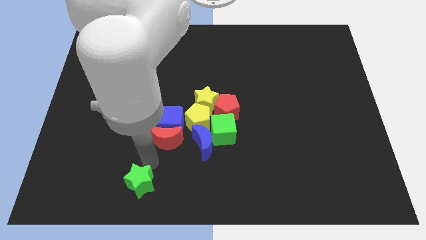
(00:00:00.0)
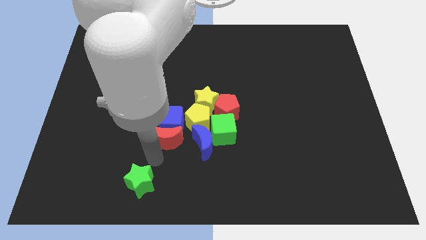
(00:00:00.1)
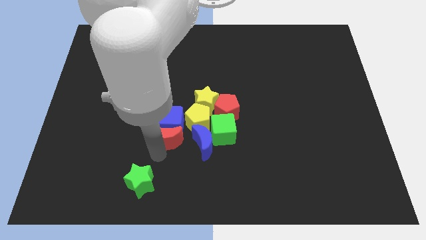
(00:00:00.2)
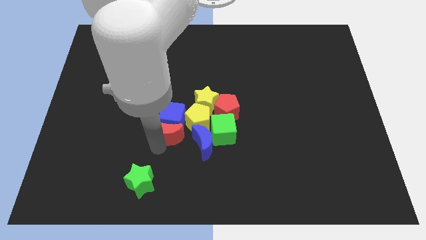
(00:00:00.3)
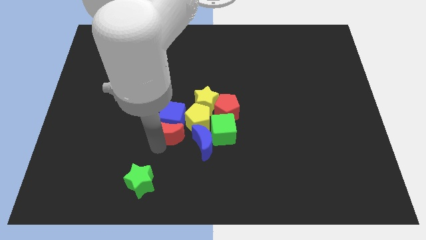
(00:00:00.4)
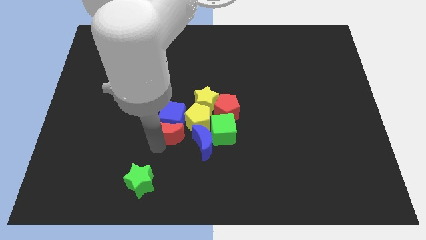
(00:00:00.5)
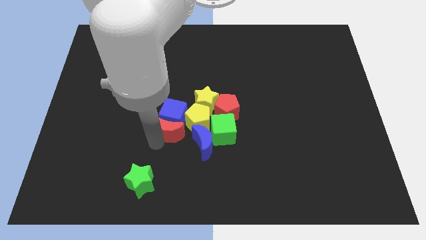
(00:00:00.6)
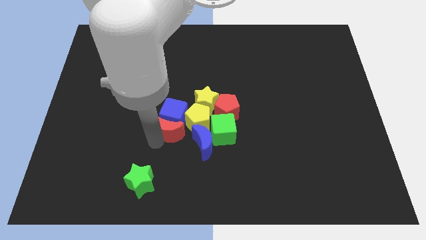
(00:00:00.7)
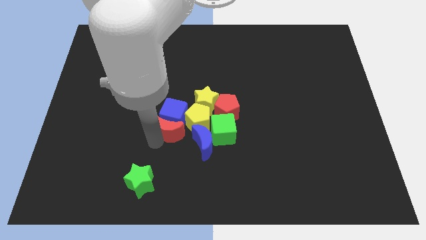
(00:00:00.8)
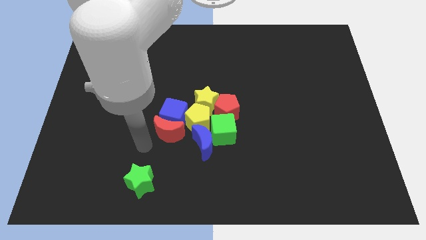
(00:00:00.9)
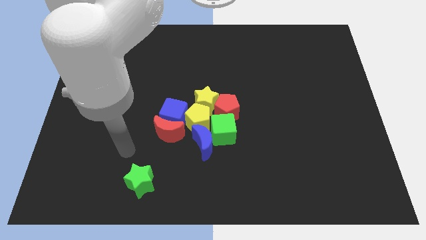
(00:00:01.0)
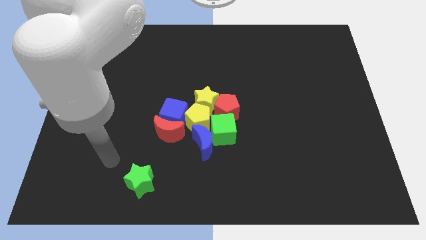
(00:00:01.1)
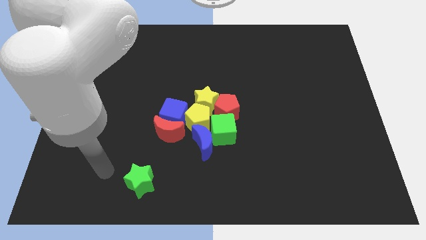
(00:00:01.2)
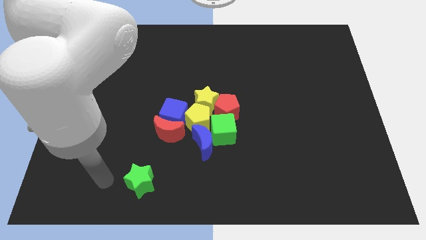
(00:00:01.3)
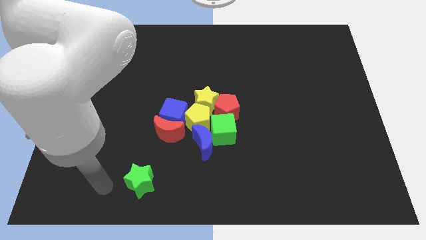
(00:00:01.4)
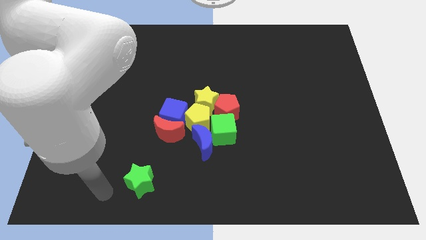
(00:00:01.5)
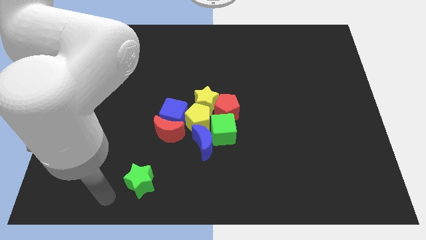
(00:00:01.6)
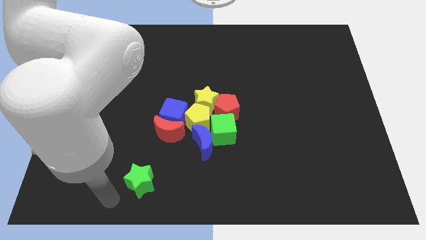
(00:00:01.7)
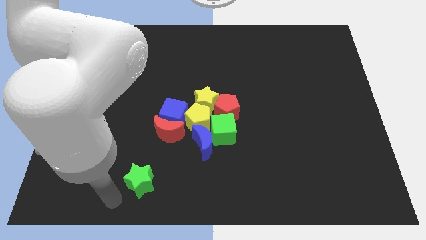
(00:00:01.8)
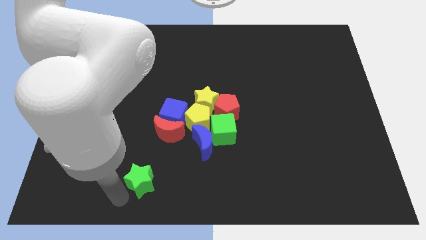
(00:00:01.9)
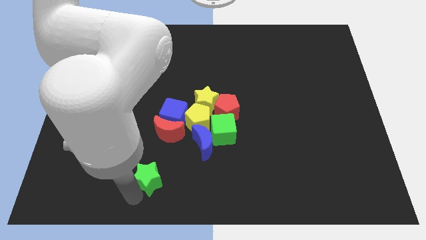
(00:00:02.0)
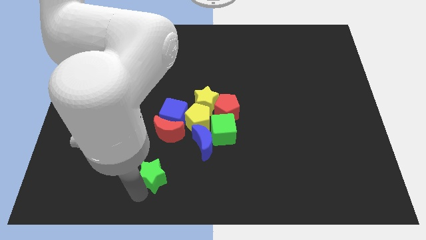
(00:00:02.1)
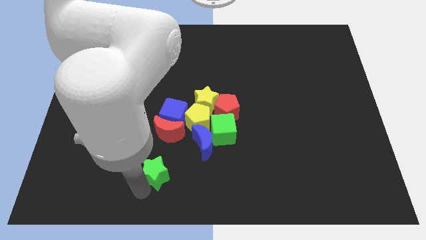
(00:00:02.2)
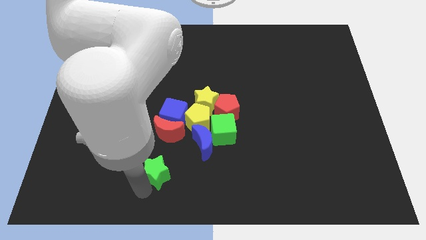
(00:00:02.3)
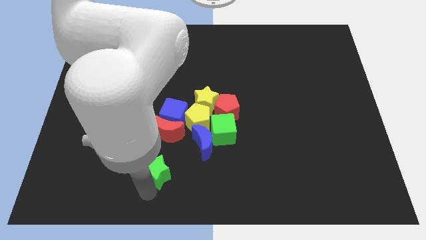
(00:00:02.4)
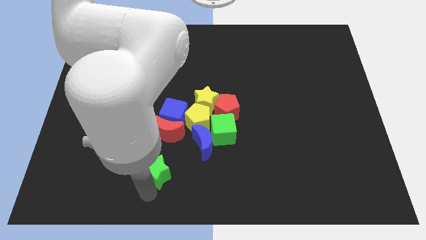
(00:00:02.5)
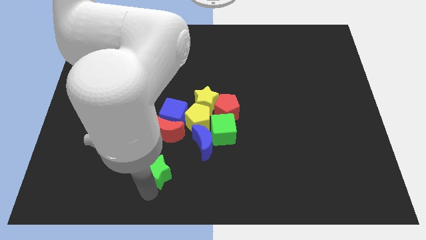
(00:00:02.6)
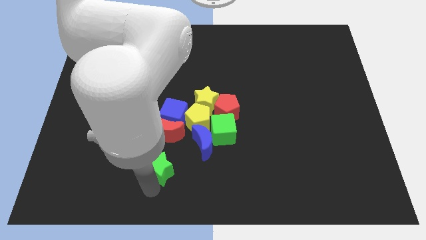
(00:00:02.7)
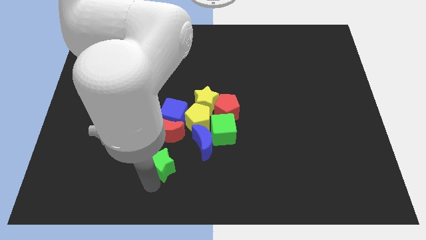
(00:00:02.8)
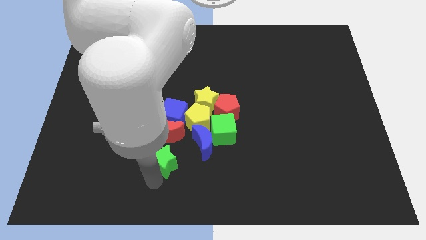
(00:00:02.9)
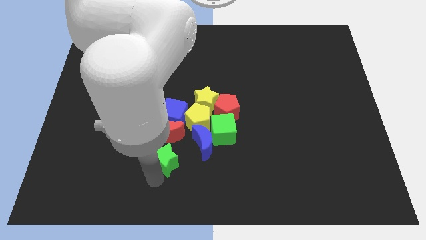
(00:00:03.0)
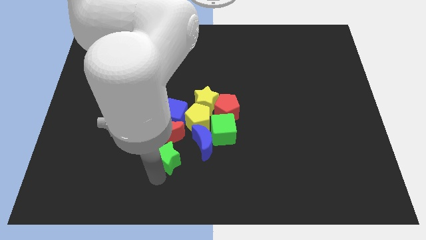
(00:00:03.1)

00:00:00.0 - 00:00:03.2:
slide the green star below the red moon

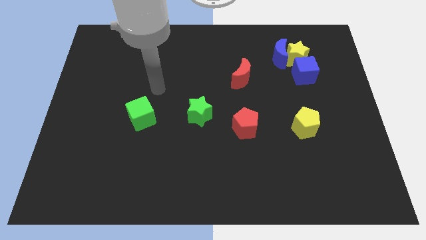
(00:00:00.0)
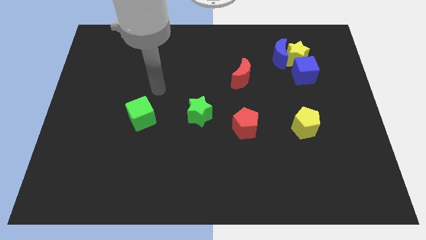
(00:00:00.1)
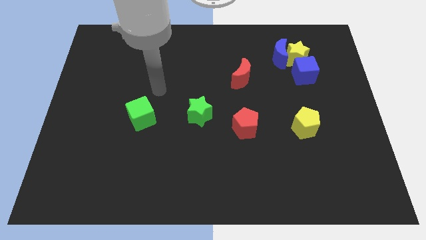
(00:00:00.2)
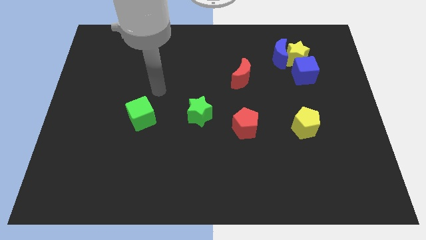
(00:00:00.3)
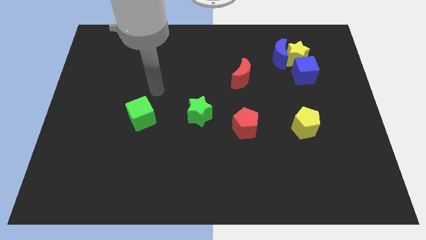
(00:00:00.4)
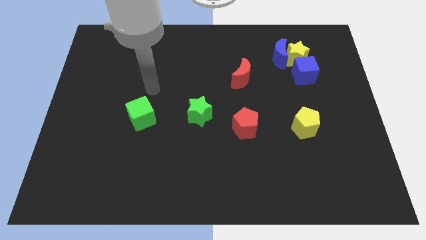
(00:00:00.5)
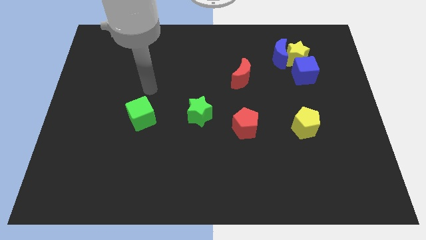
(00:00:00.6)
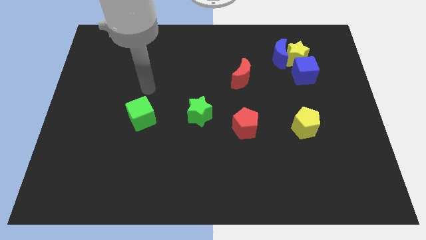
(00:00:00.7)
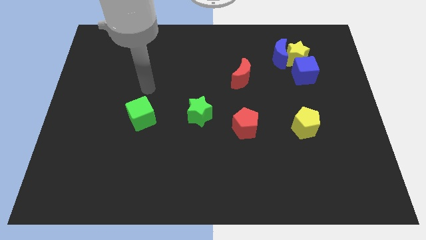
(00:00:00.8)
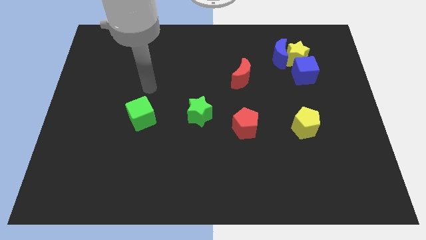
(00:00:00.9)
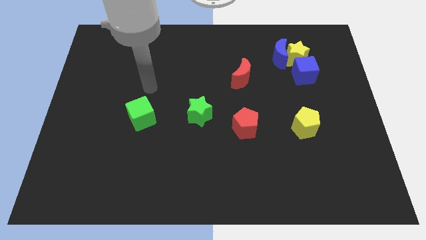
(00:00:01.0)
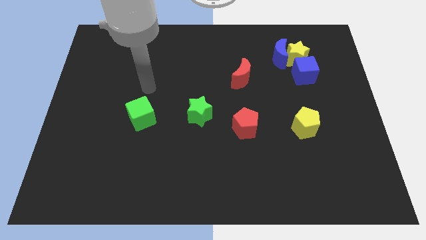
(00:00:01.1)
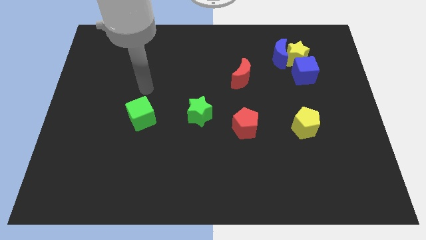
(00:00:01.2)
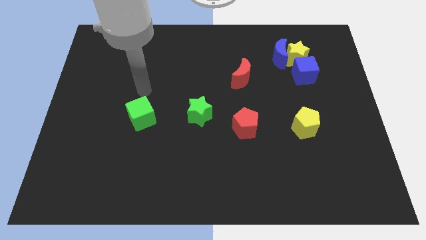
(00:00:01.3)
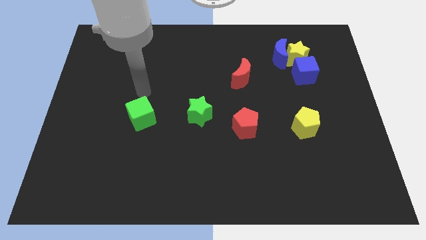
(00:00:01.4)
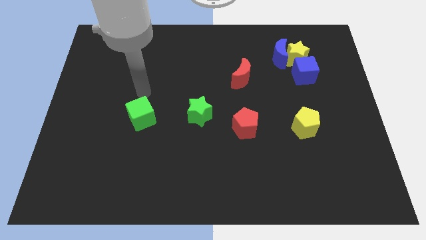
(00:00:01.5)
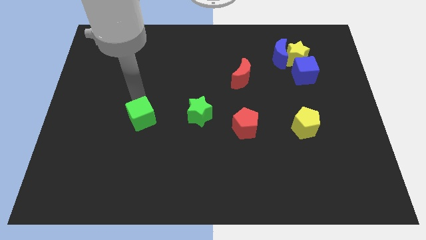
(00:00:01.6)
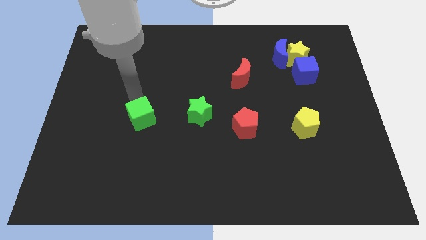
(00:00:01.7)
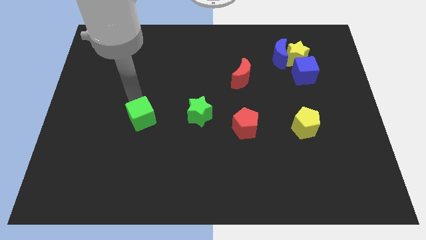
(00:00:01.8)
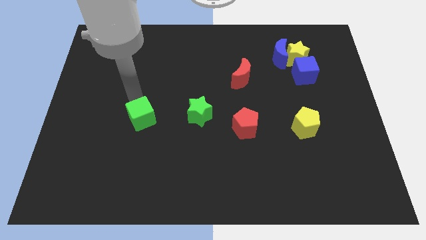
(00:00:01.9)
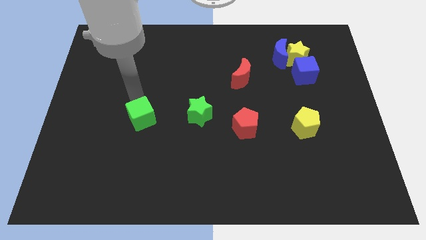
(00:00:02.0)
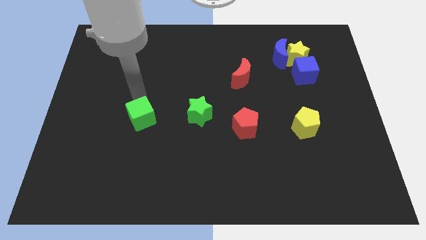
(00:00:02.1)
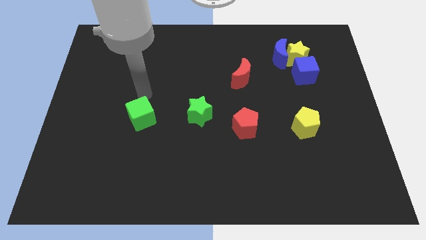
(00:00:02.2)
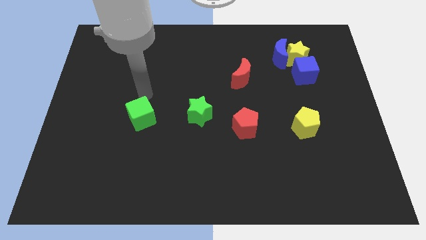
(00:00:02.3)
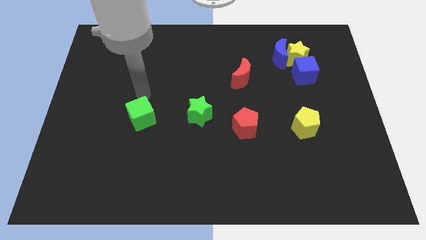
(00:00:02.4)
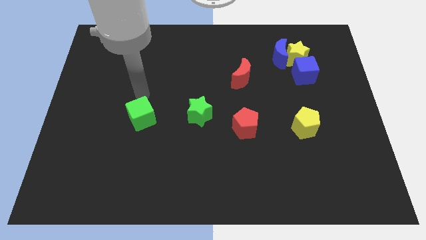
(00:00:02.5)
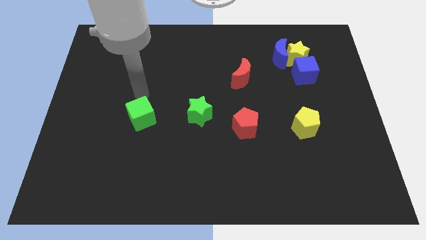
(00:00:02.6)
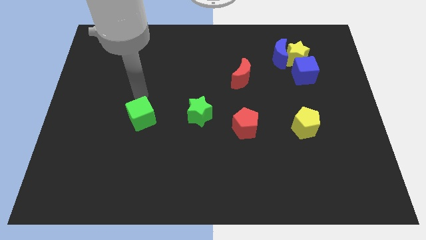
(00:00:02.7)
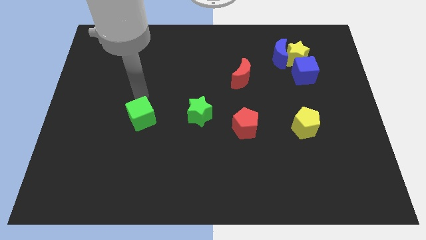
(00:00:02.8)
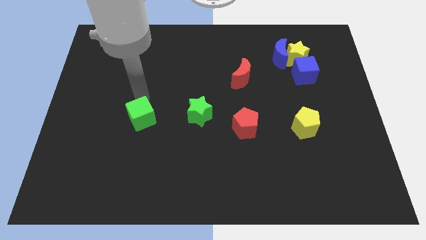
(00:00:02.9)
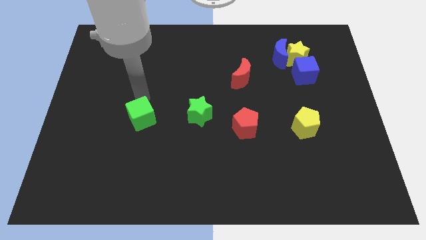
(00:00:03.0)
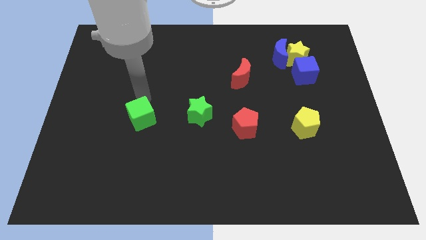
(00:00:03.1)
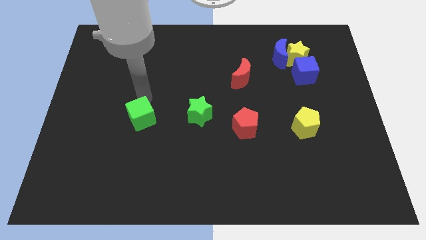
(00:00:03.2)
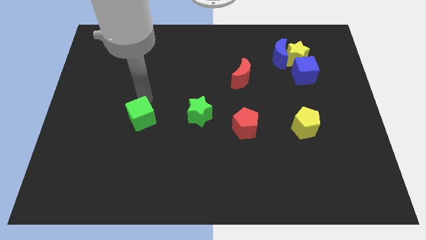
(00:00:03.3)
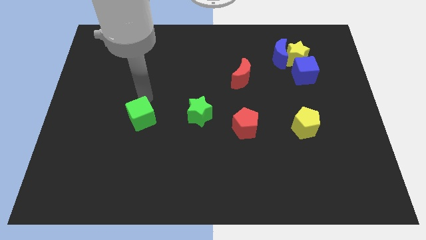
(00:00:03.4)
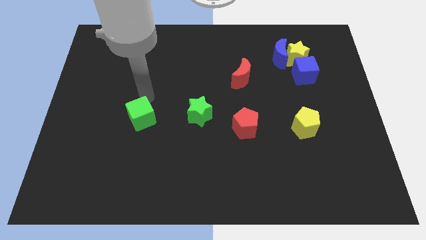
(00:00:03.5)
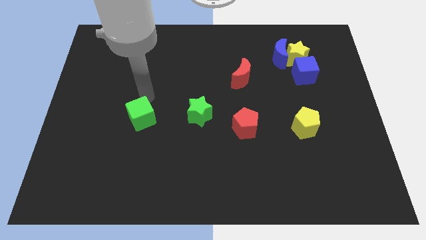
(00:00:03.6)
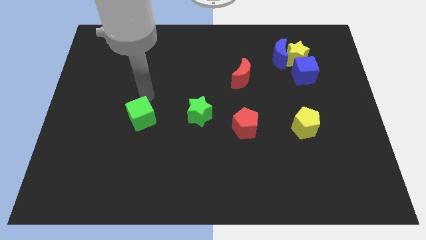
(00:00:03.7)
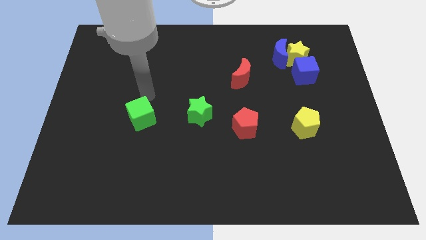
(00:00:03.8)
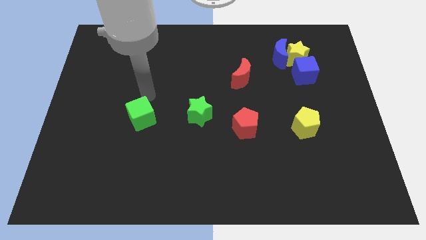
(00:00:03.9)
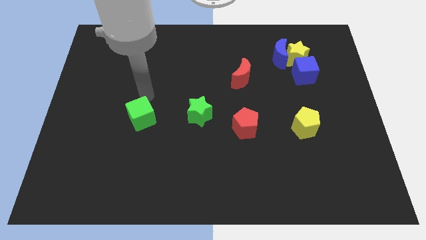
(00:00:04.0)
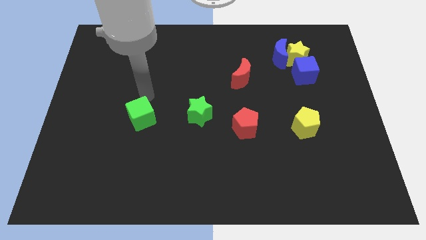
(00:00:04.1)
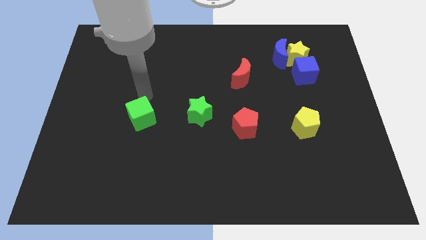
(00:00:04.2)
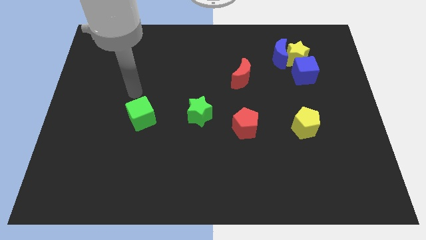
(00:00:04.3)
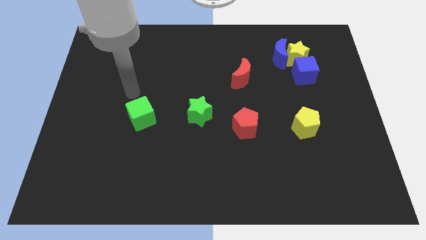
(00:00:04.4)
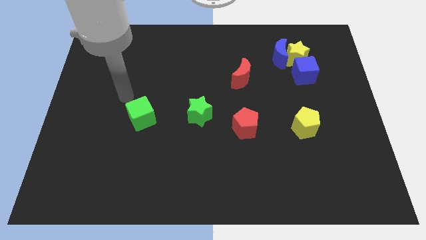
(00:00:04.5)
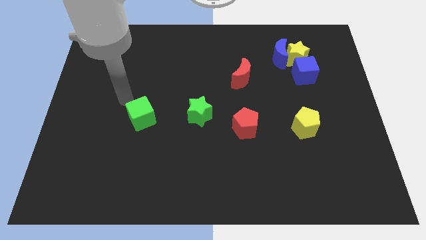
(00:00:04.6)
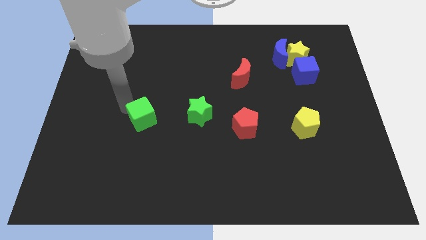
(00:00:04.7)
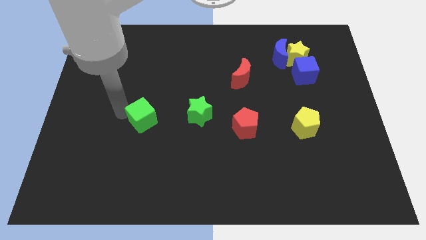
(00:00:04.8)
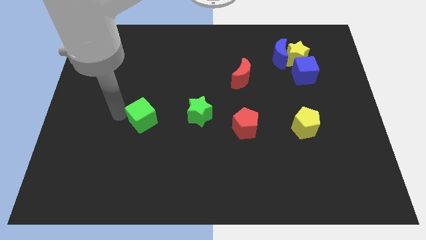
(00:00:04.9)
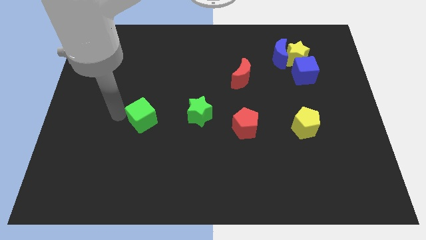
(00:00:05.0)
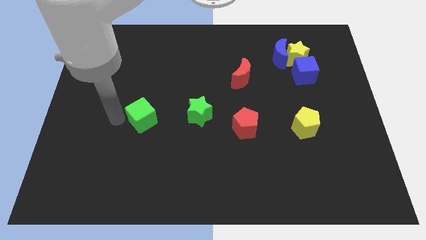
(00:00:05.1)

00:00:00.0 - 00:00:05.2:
move your arm towards the green cube

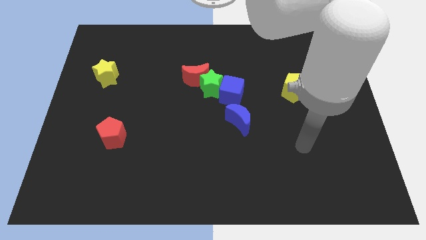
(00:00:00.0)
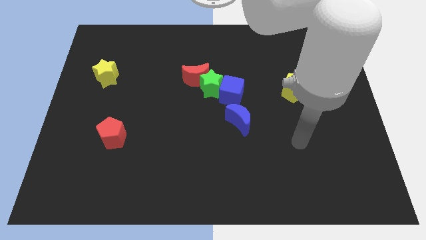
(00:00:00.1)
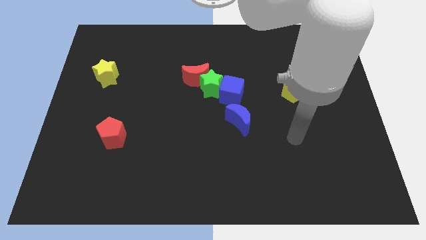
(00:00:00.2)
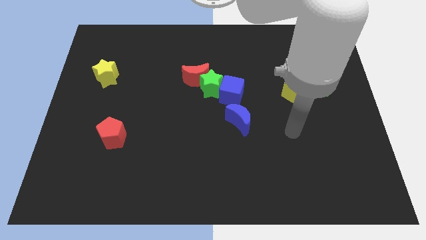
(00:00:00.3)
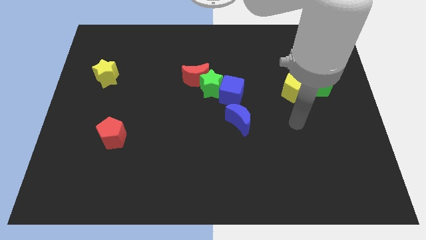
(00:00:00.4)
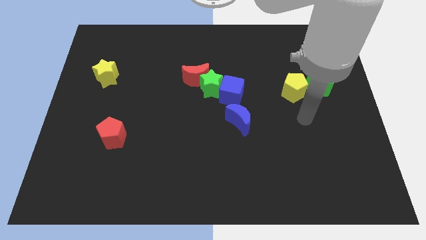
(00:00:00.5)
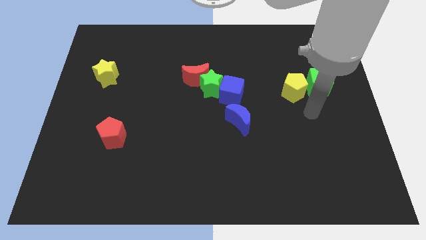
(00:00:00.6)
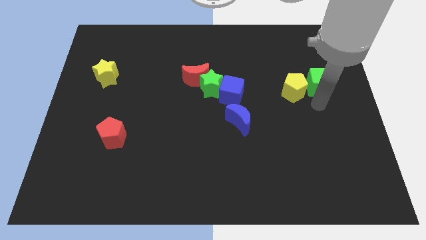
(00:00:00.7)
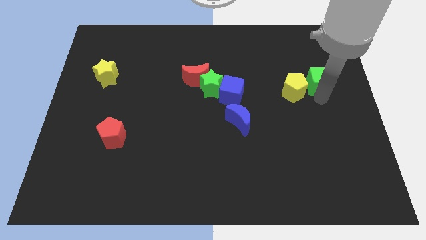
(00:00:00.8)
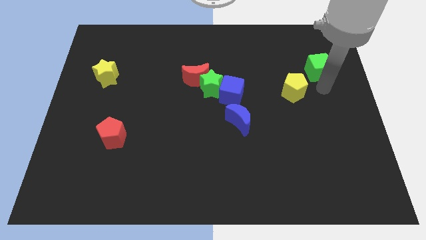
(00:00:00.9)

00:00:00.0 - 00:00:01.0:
touch the bottom of green cube
